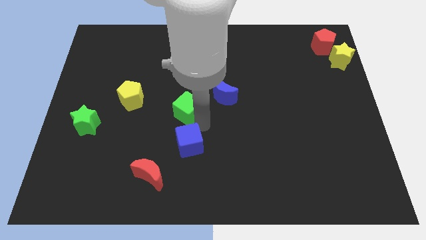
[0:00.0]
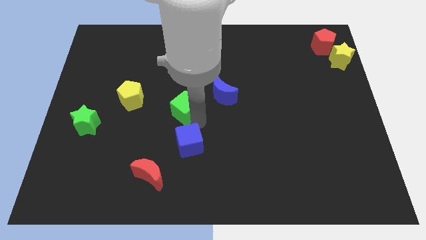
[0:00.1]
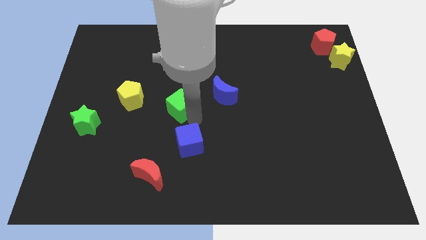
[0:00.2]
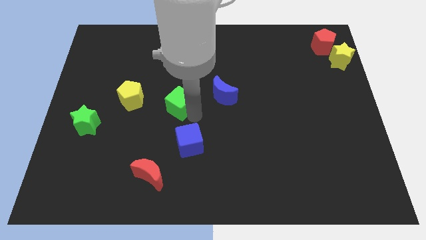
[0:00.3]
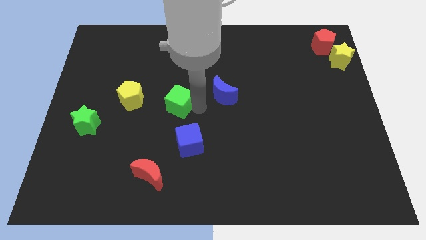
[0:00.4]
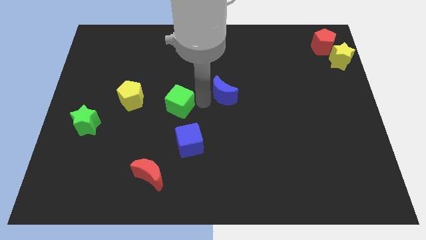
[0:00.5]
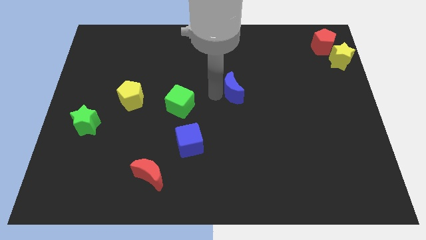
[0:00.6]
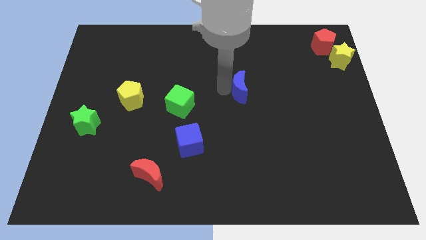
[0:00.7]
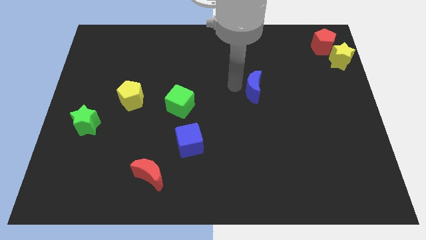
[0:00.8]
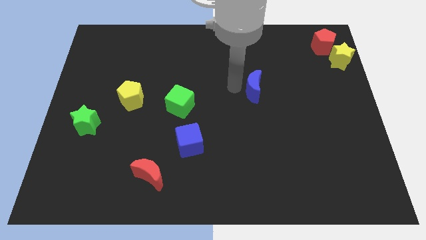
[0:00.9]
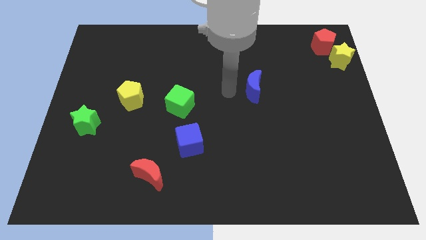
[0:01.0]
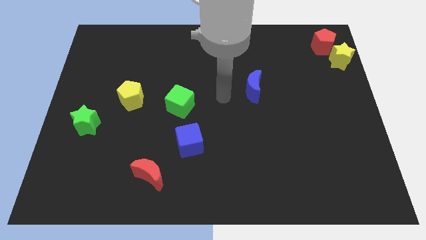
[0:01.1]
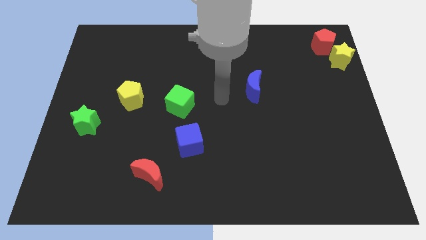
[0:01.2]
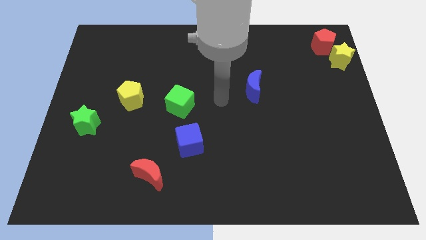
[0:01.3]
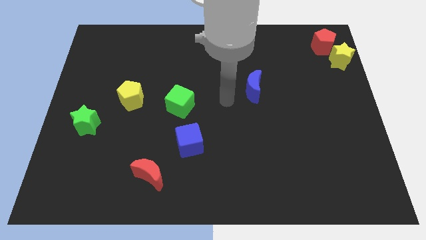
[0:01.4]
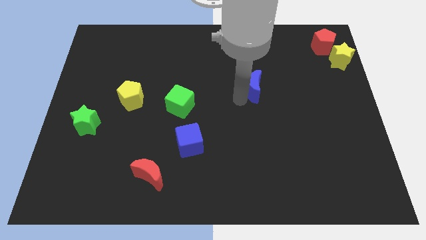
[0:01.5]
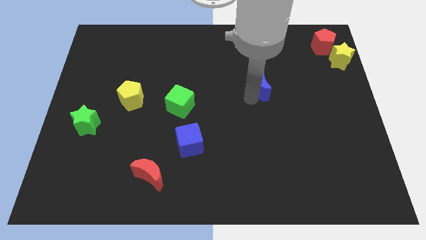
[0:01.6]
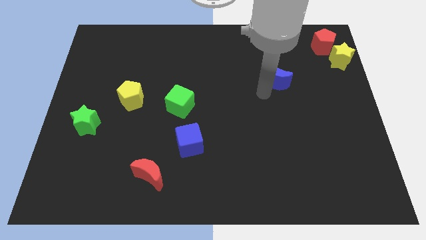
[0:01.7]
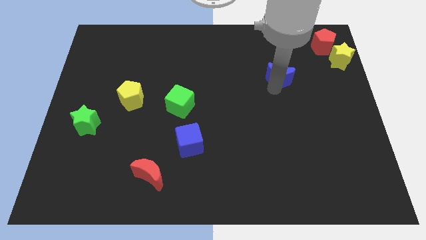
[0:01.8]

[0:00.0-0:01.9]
push the blue crescent towards the red pentagon

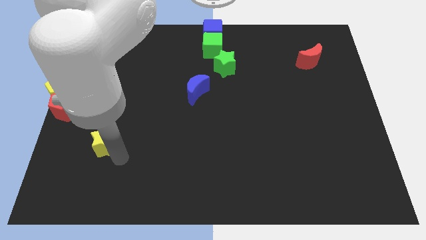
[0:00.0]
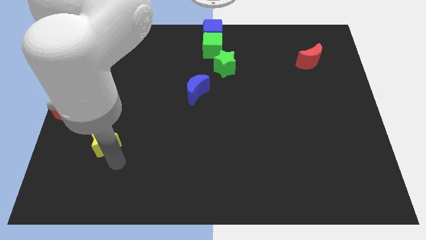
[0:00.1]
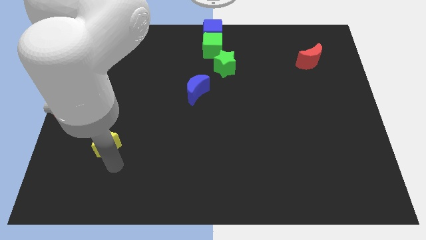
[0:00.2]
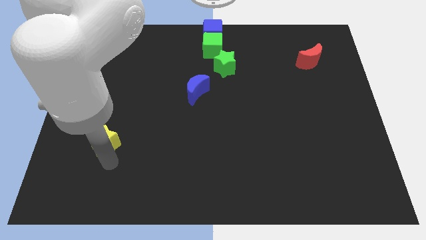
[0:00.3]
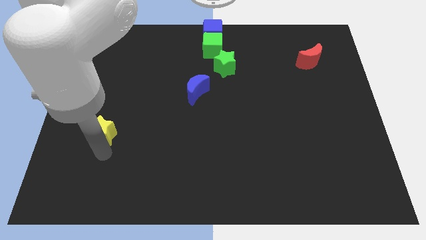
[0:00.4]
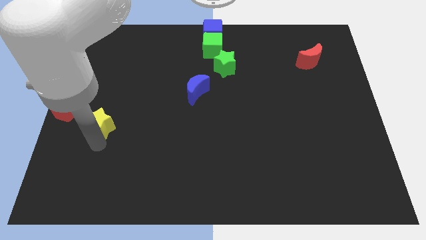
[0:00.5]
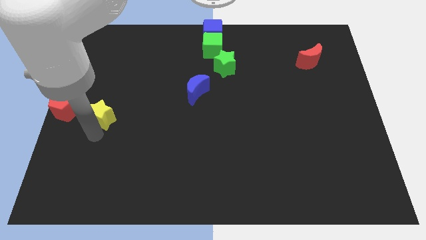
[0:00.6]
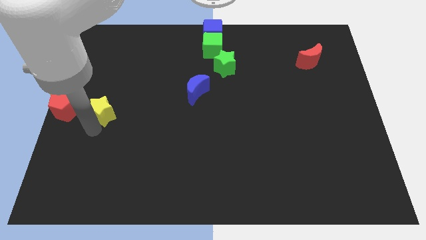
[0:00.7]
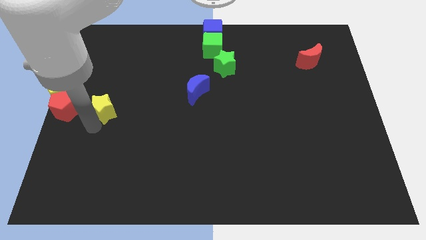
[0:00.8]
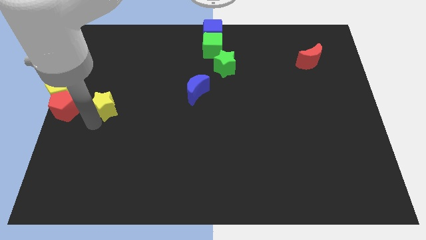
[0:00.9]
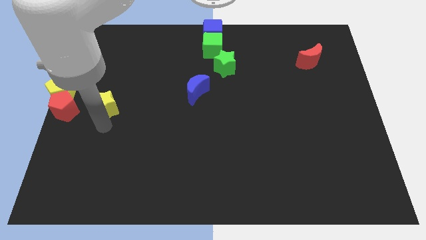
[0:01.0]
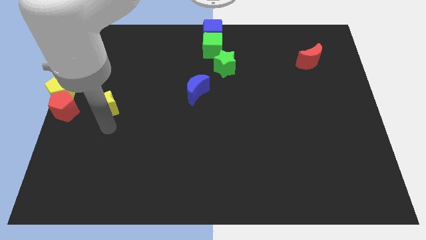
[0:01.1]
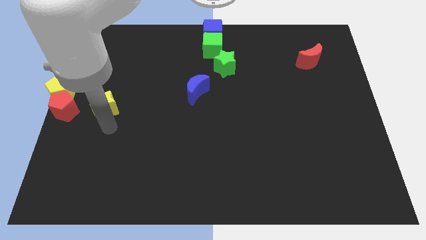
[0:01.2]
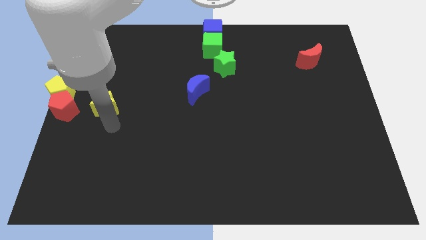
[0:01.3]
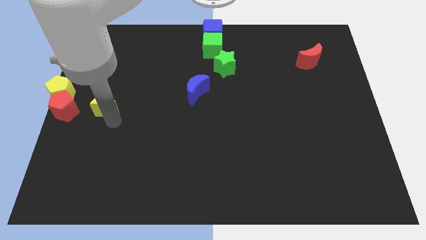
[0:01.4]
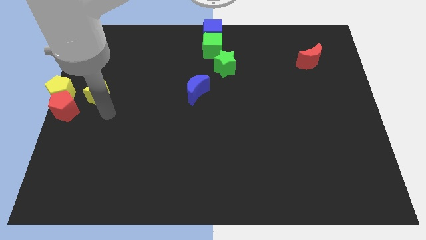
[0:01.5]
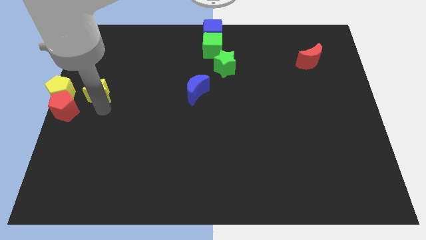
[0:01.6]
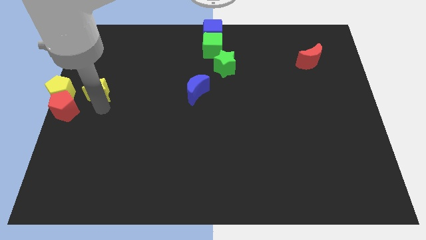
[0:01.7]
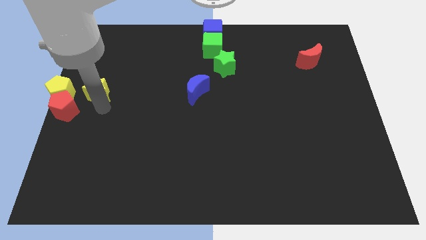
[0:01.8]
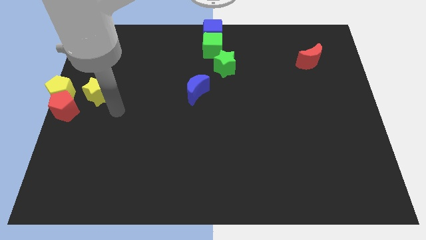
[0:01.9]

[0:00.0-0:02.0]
move the yellow star close to the yellow pentagon

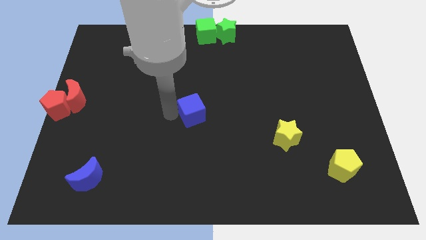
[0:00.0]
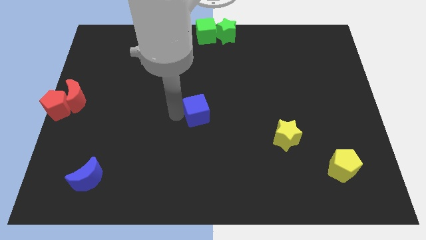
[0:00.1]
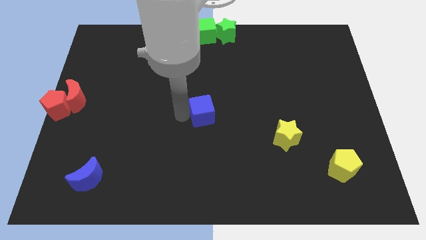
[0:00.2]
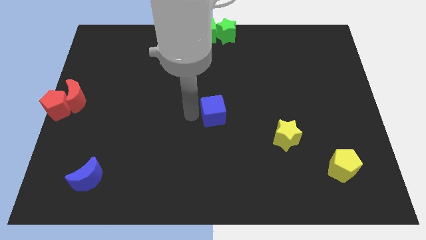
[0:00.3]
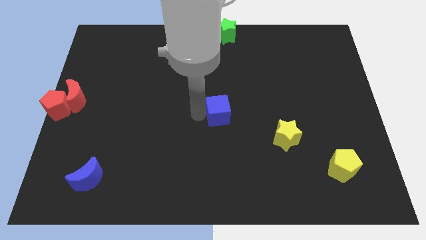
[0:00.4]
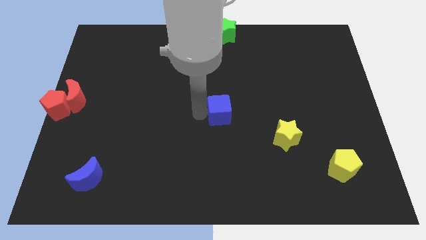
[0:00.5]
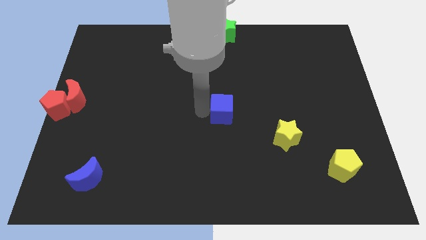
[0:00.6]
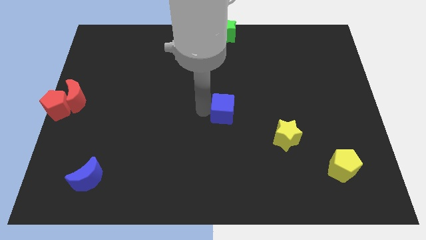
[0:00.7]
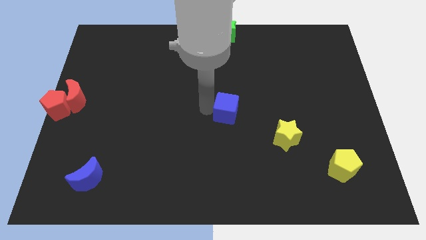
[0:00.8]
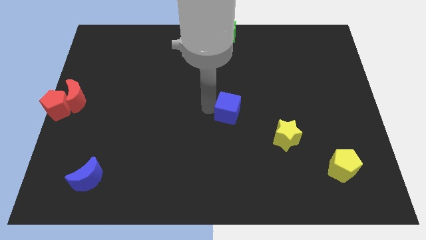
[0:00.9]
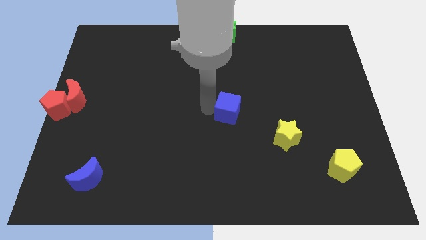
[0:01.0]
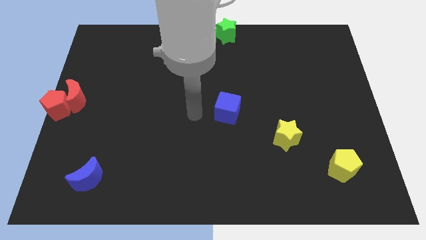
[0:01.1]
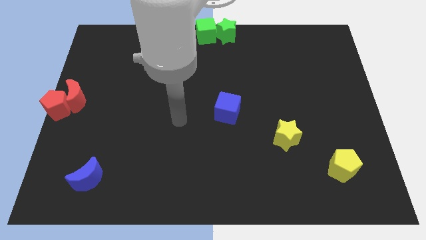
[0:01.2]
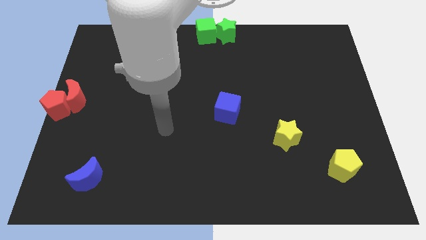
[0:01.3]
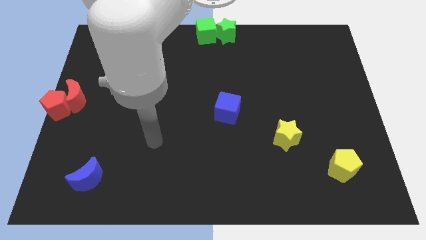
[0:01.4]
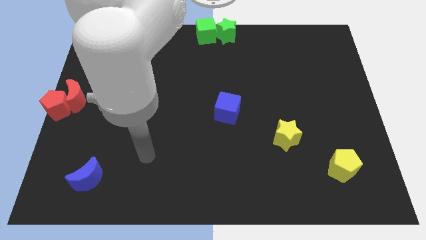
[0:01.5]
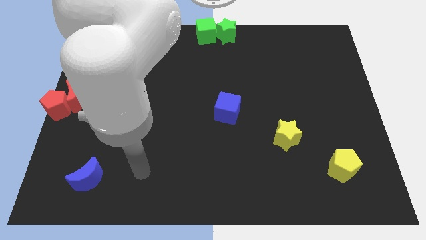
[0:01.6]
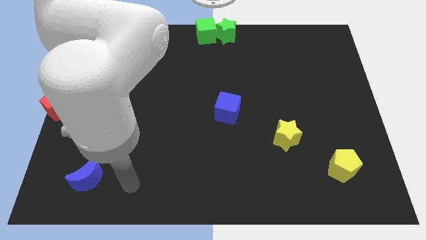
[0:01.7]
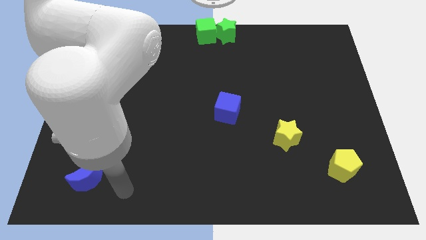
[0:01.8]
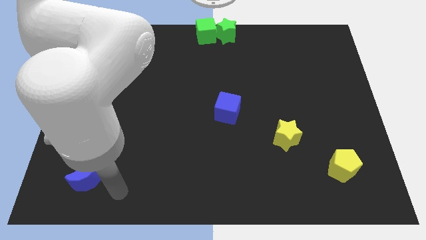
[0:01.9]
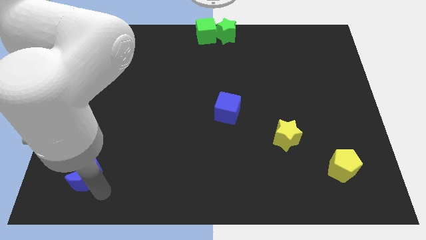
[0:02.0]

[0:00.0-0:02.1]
place the blue cube slightly right to the center of the board

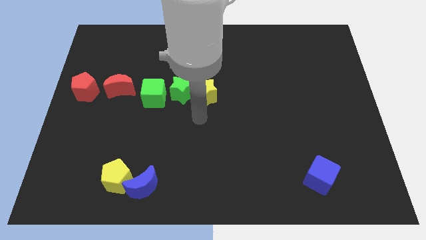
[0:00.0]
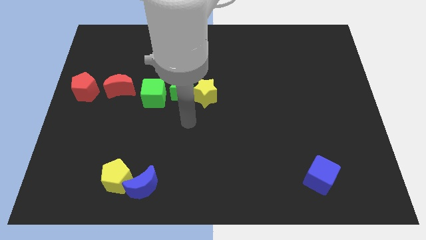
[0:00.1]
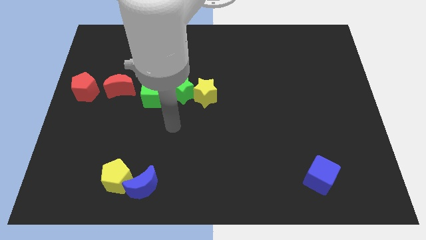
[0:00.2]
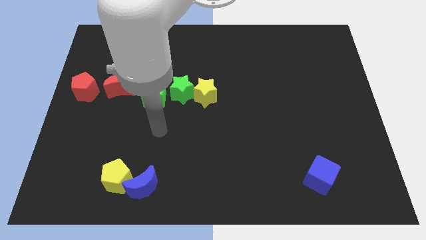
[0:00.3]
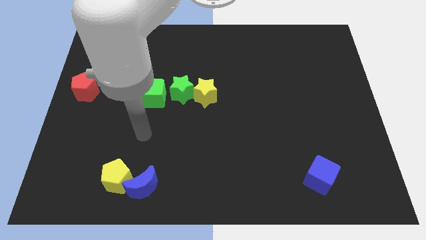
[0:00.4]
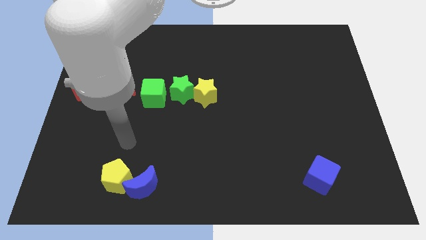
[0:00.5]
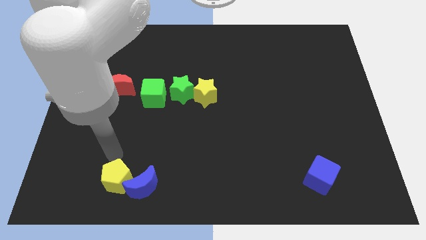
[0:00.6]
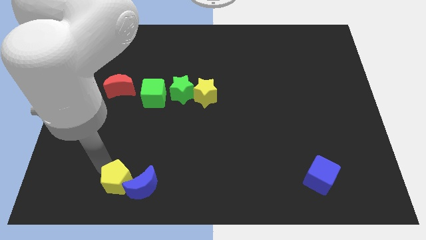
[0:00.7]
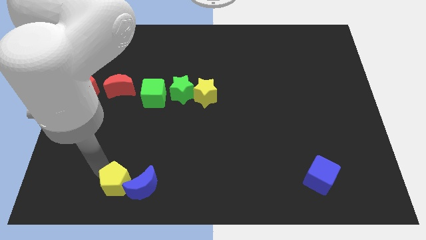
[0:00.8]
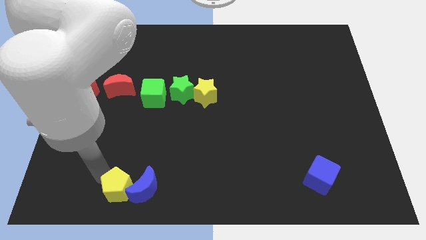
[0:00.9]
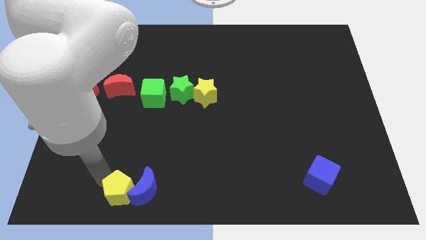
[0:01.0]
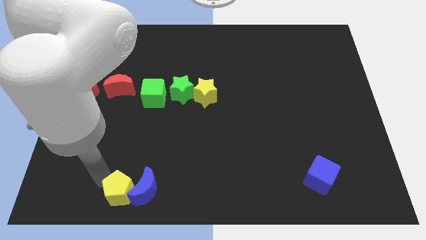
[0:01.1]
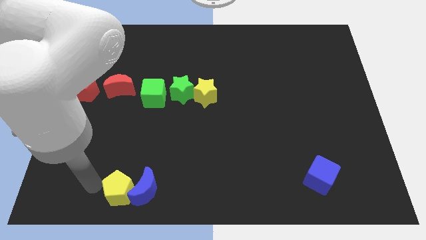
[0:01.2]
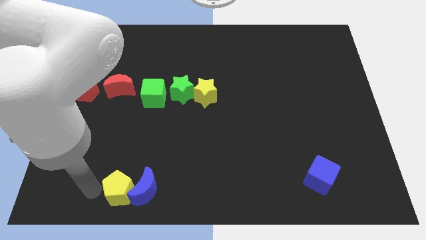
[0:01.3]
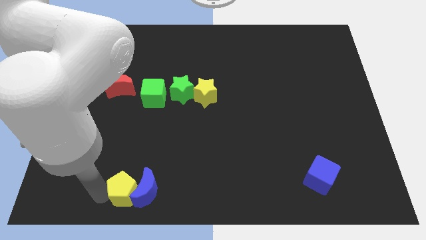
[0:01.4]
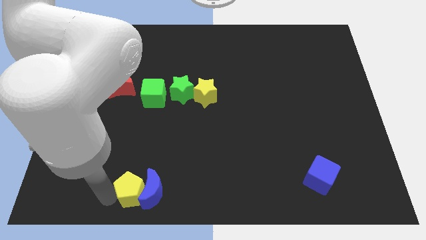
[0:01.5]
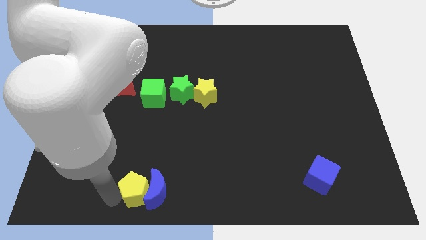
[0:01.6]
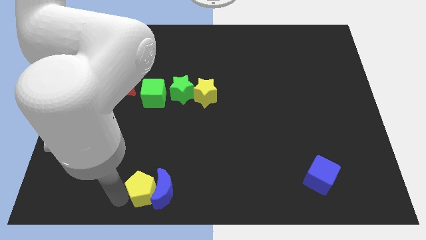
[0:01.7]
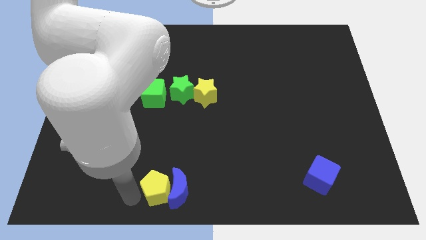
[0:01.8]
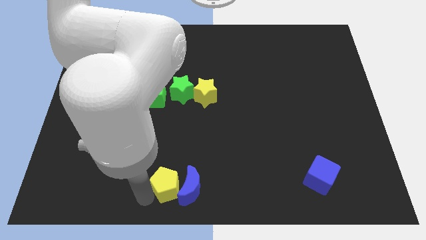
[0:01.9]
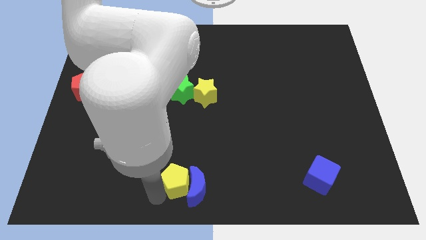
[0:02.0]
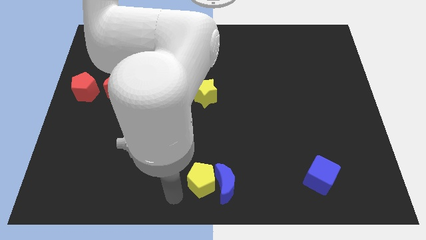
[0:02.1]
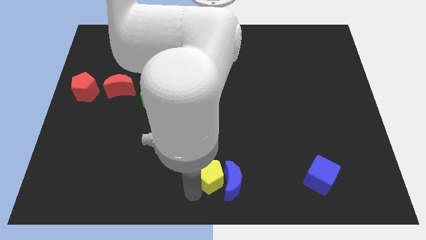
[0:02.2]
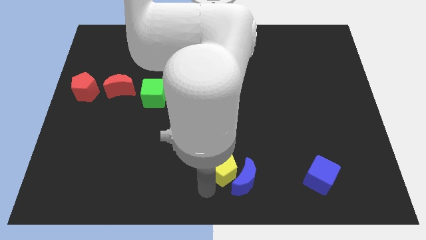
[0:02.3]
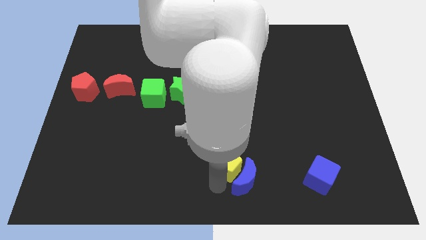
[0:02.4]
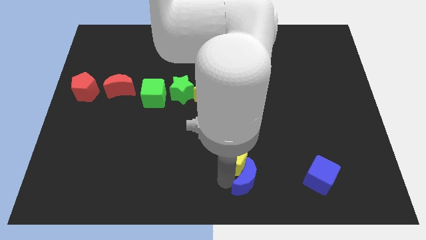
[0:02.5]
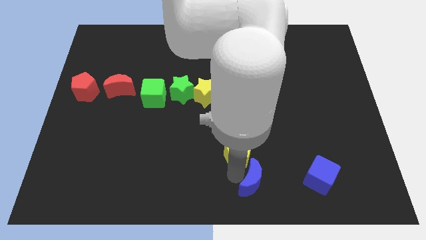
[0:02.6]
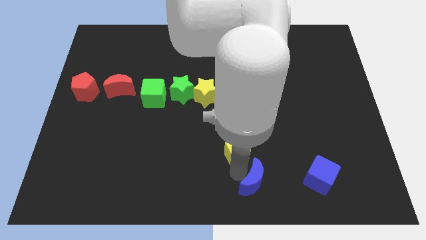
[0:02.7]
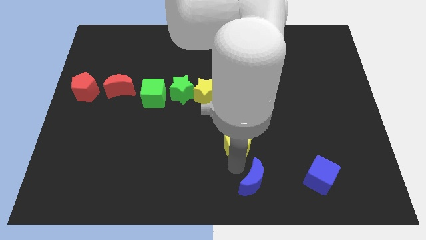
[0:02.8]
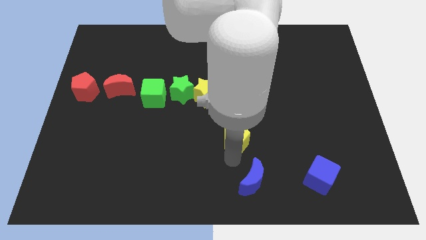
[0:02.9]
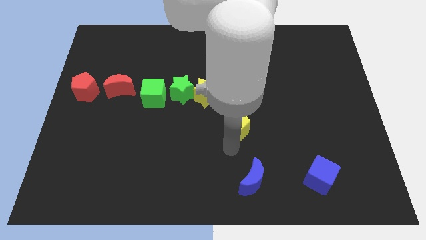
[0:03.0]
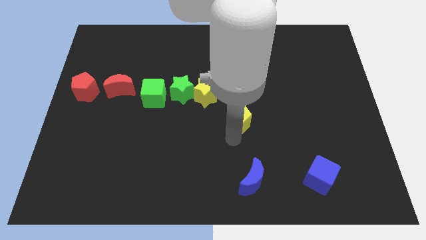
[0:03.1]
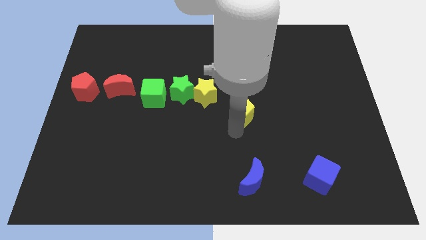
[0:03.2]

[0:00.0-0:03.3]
separate the yellow pentagon from the blue moon
